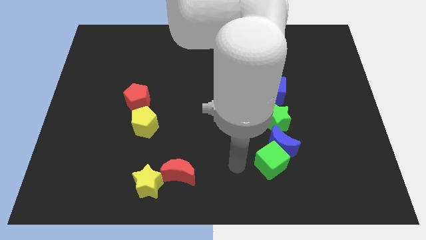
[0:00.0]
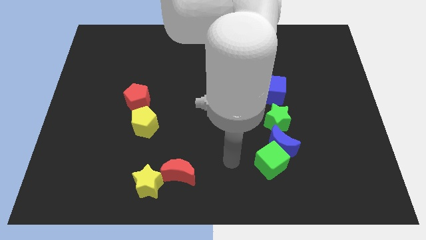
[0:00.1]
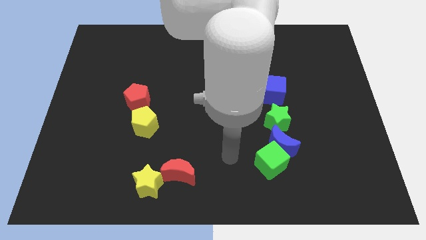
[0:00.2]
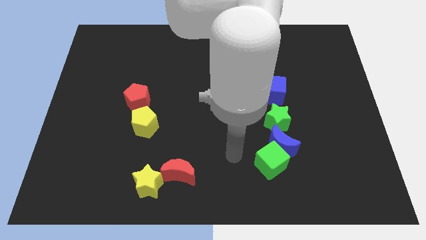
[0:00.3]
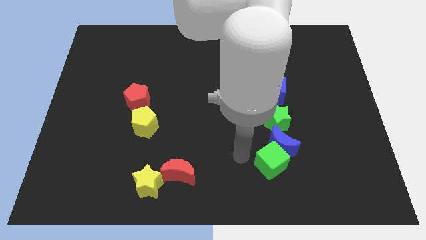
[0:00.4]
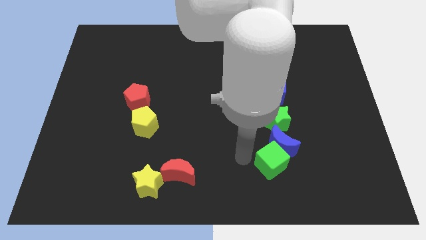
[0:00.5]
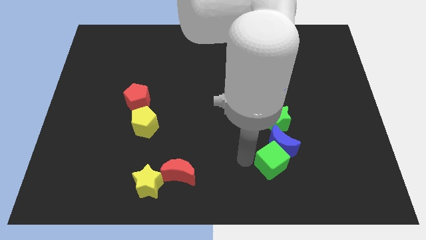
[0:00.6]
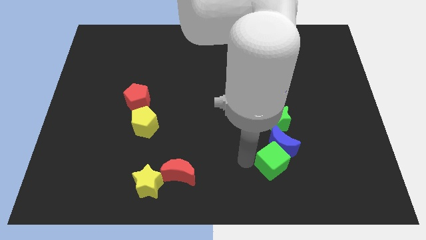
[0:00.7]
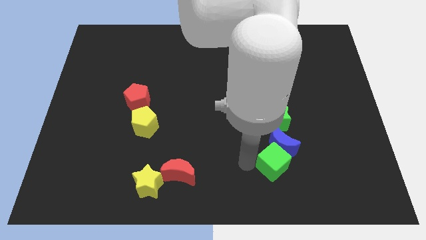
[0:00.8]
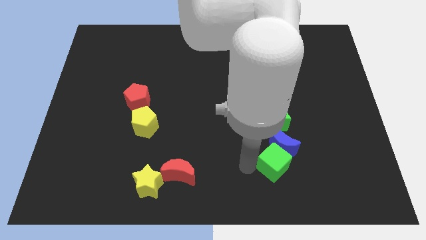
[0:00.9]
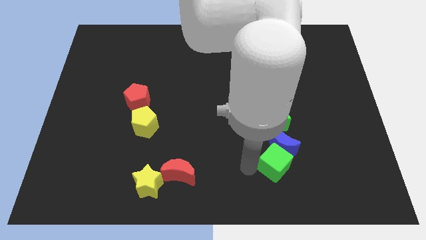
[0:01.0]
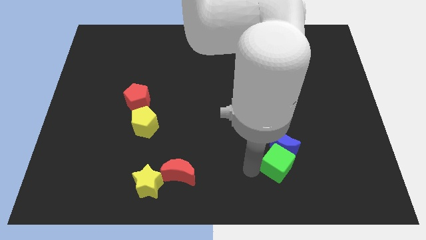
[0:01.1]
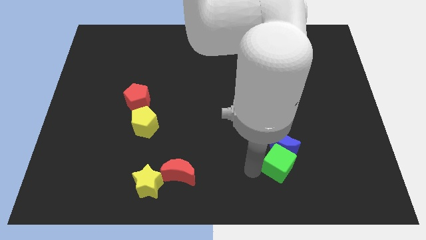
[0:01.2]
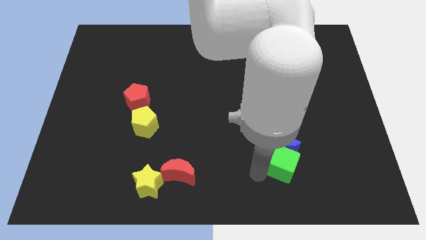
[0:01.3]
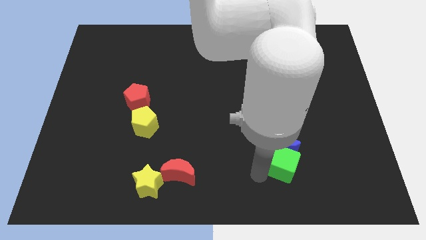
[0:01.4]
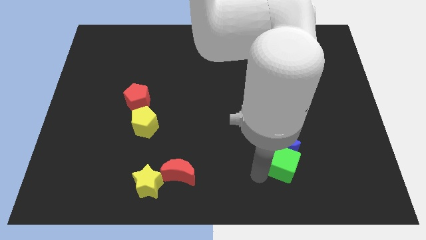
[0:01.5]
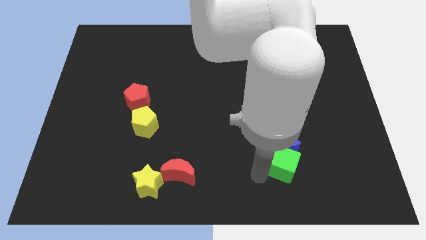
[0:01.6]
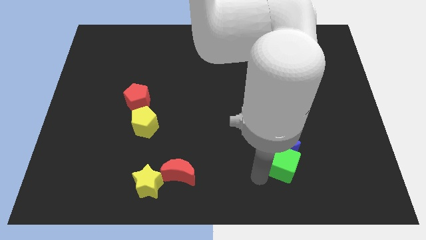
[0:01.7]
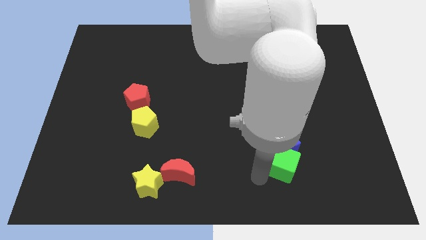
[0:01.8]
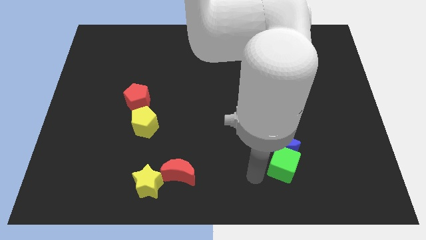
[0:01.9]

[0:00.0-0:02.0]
place the green cube below the blue crescent

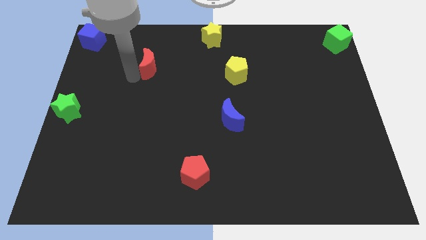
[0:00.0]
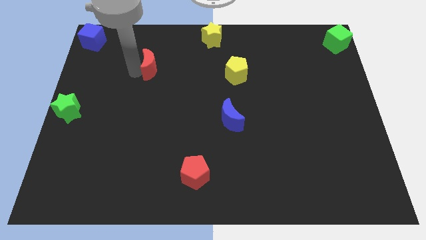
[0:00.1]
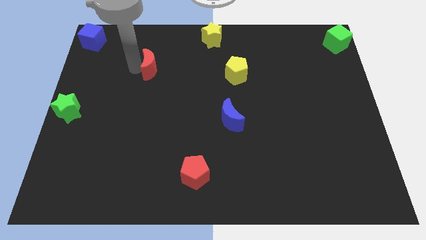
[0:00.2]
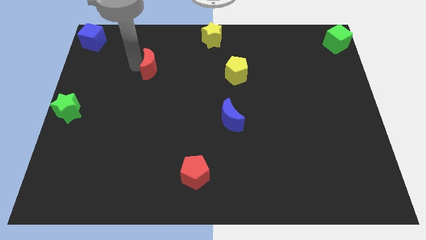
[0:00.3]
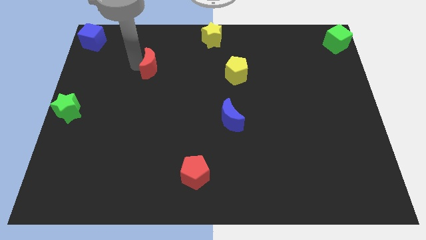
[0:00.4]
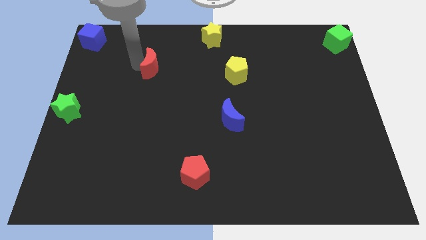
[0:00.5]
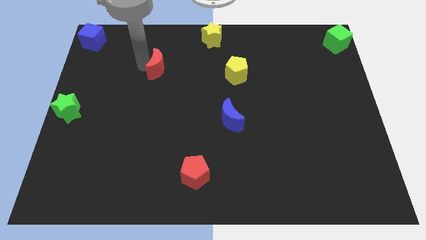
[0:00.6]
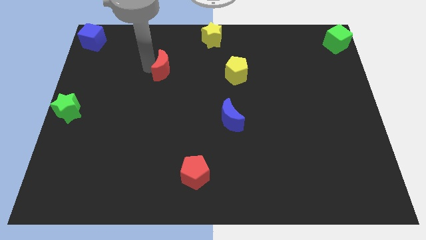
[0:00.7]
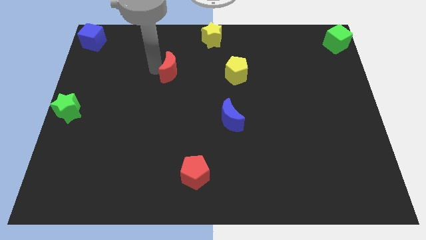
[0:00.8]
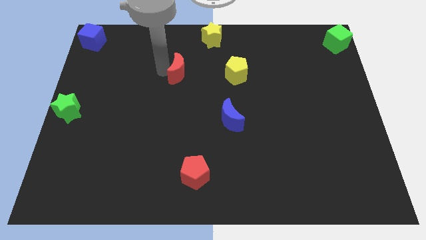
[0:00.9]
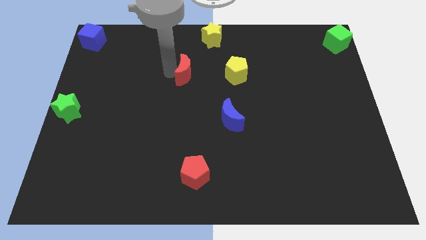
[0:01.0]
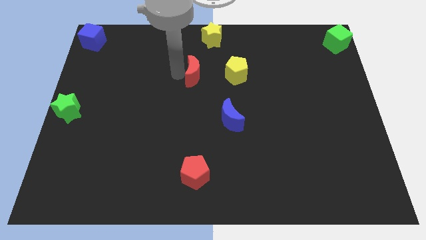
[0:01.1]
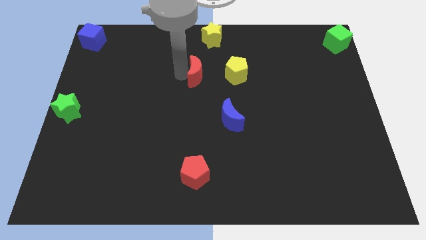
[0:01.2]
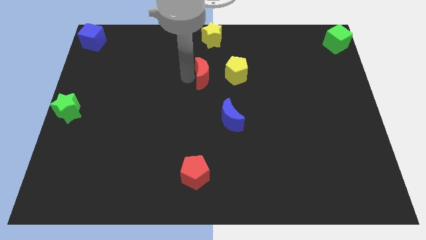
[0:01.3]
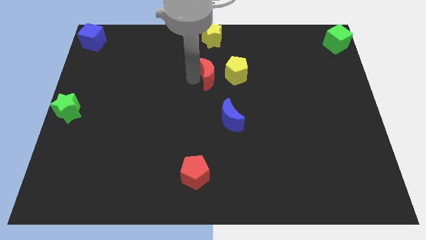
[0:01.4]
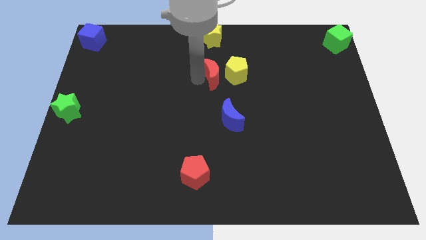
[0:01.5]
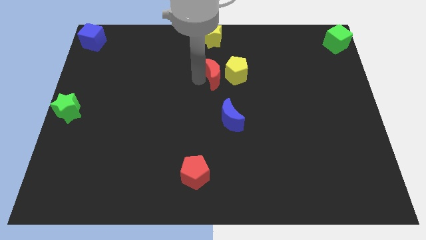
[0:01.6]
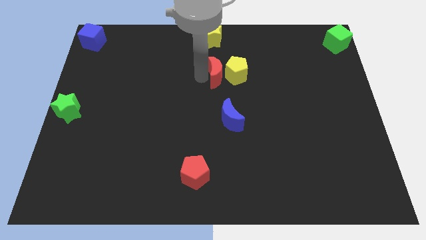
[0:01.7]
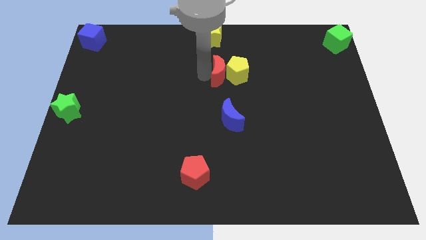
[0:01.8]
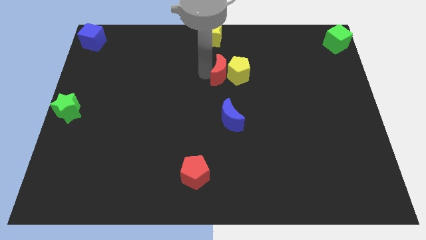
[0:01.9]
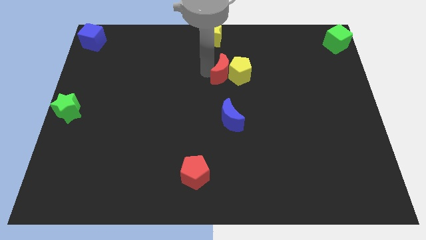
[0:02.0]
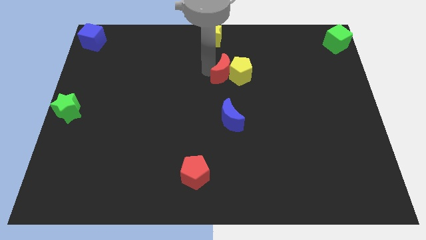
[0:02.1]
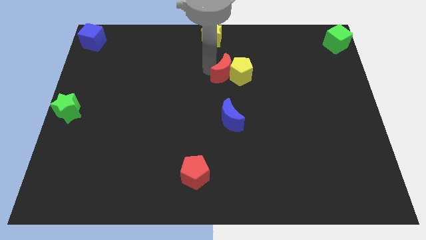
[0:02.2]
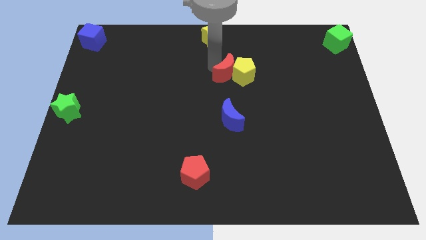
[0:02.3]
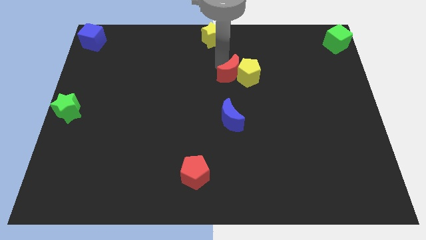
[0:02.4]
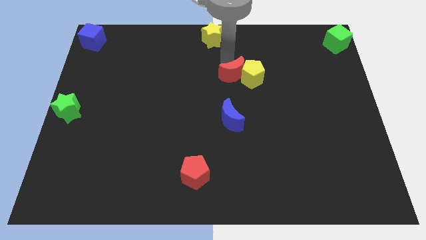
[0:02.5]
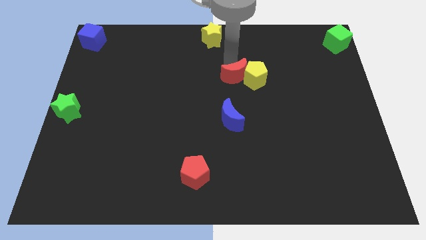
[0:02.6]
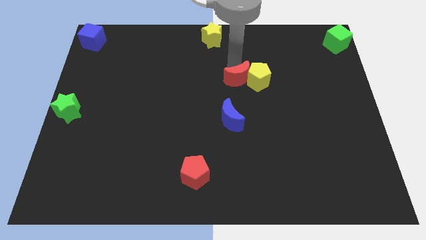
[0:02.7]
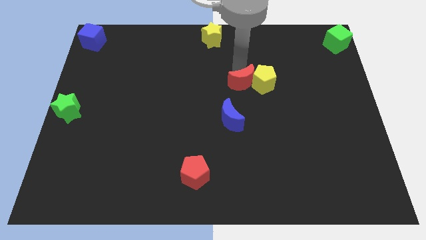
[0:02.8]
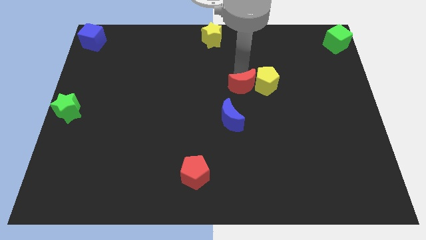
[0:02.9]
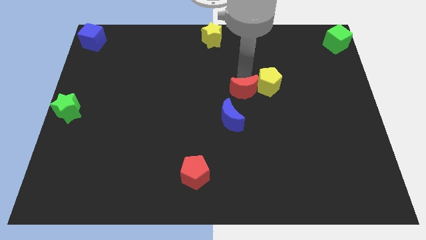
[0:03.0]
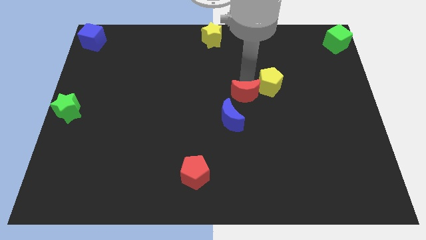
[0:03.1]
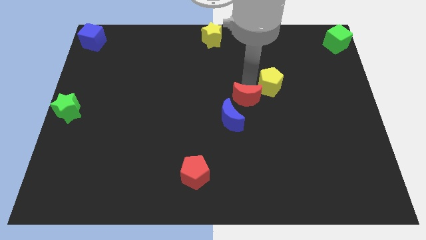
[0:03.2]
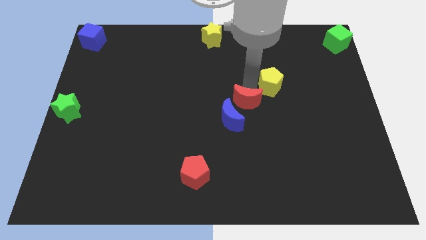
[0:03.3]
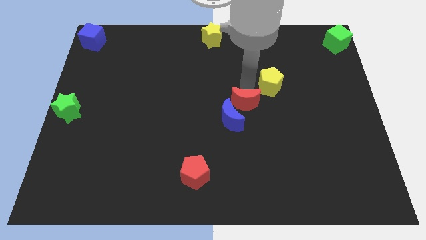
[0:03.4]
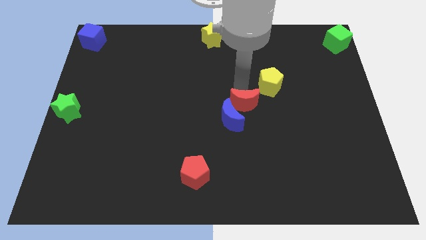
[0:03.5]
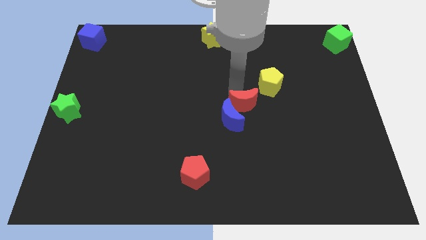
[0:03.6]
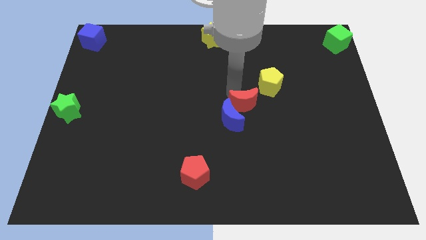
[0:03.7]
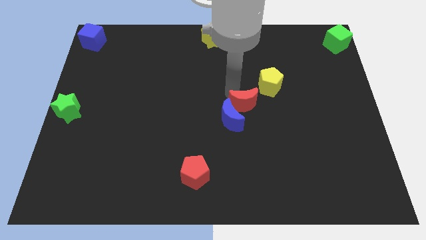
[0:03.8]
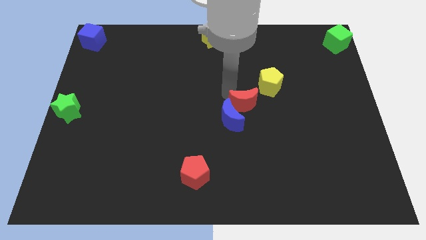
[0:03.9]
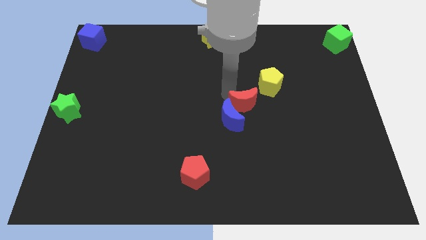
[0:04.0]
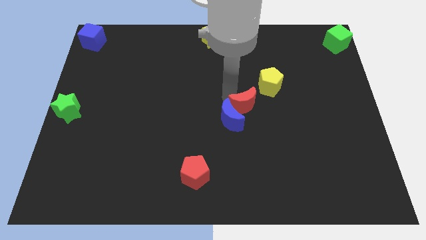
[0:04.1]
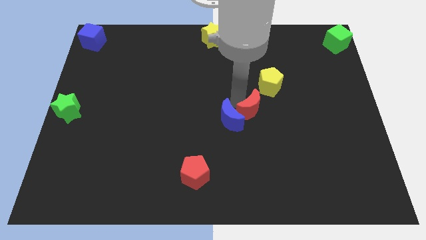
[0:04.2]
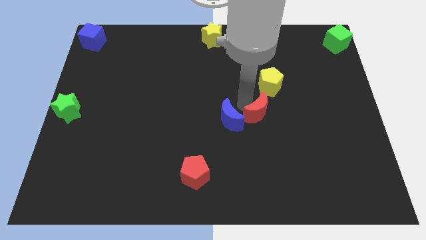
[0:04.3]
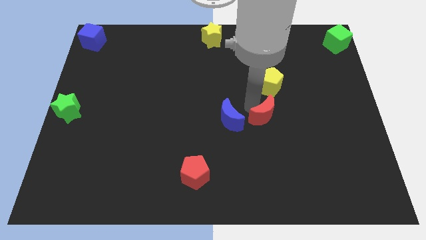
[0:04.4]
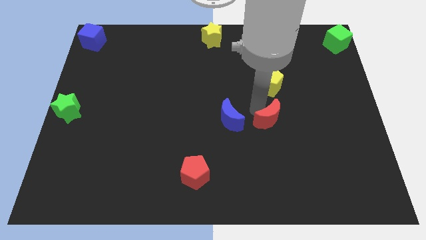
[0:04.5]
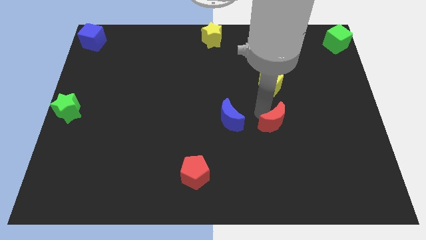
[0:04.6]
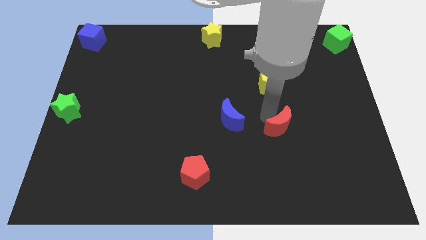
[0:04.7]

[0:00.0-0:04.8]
move the red moon below the yellow star

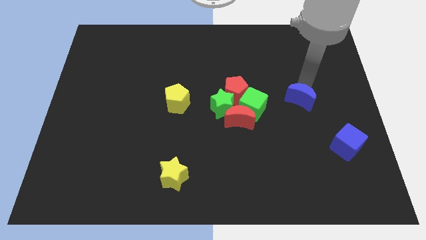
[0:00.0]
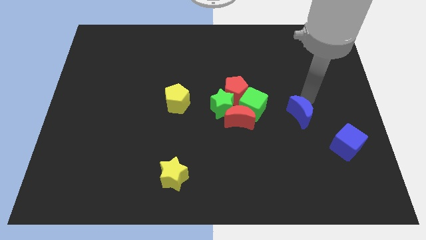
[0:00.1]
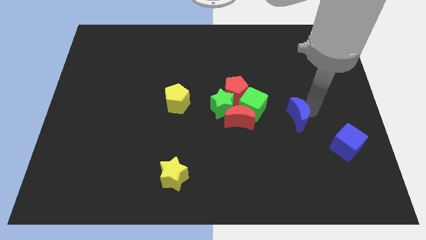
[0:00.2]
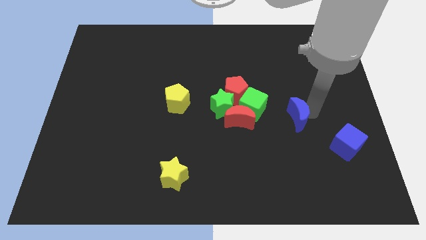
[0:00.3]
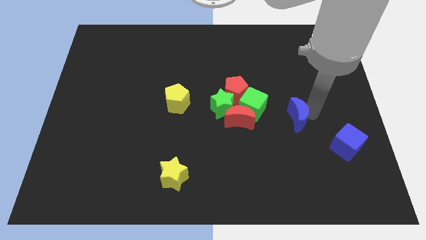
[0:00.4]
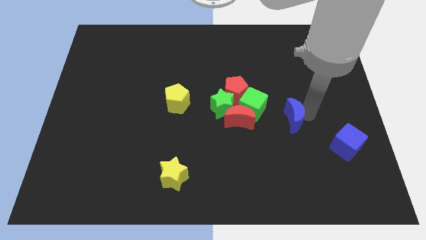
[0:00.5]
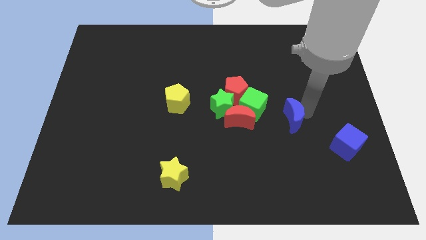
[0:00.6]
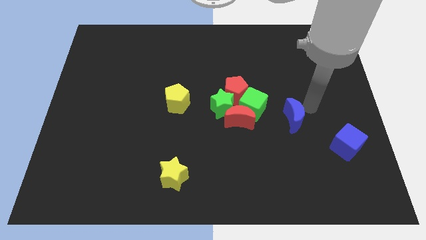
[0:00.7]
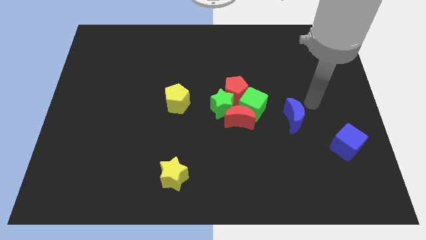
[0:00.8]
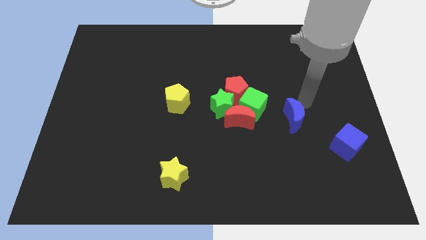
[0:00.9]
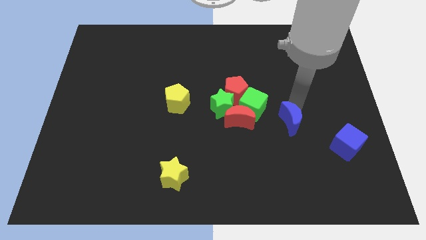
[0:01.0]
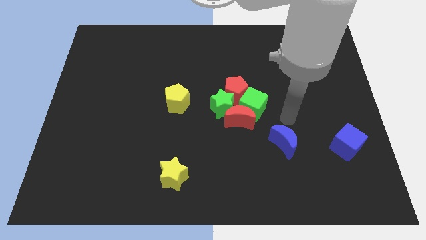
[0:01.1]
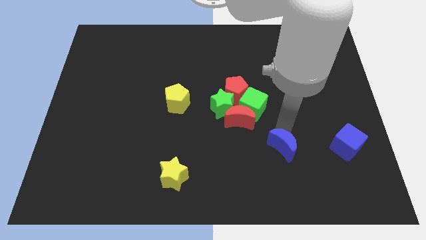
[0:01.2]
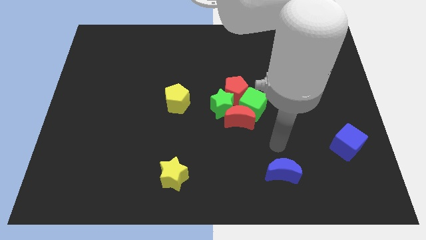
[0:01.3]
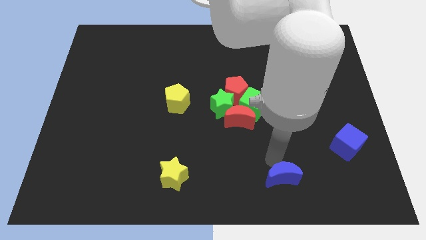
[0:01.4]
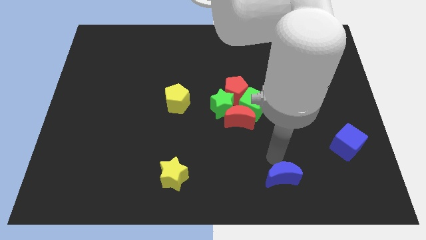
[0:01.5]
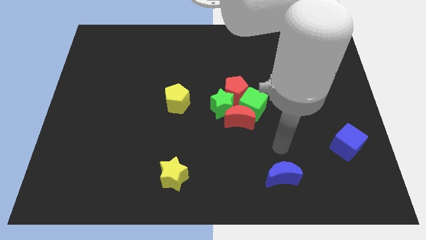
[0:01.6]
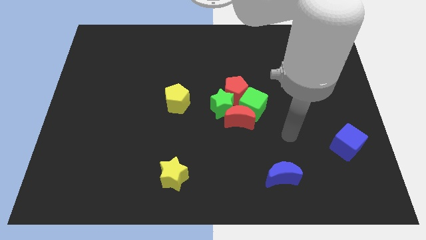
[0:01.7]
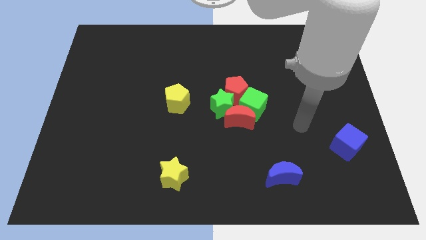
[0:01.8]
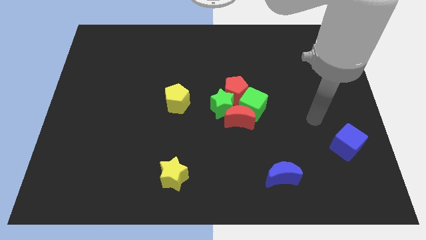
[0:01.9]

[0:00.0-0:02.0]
push blue moon towards bottom of the board

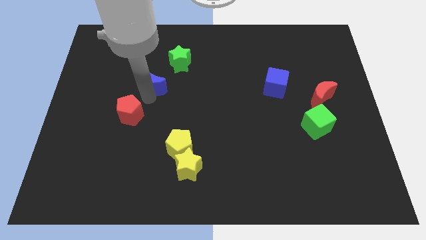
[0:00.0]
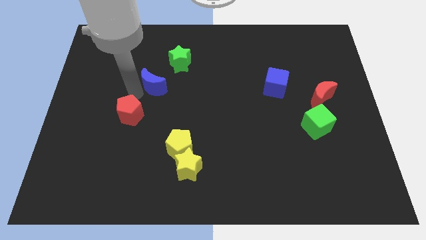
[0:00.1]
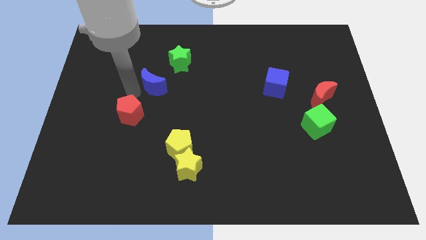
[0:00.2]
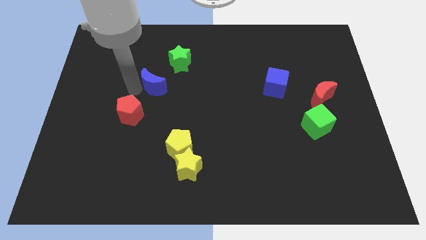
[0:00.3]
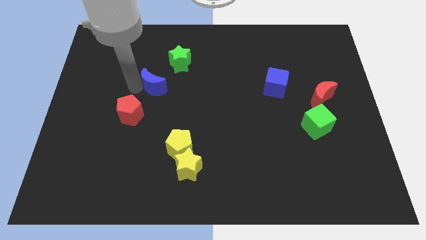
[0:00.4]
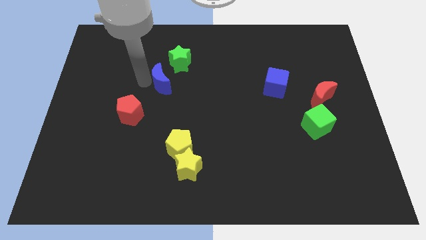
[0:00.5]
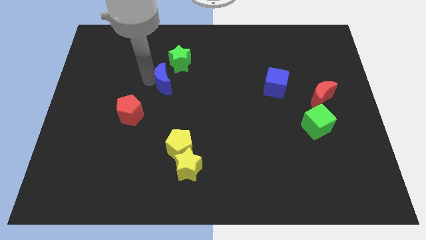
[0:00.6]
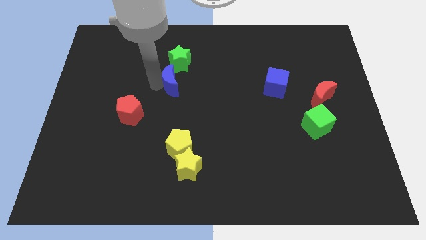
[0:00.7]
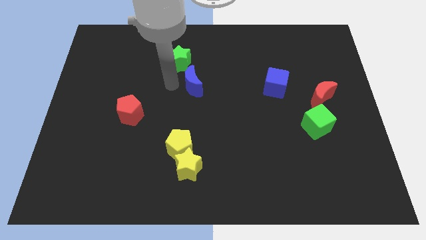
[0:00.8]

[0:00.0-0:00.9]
move blue moon to the bottom of green star
